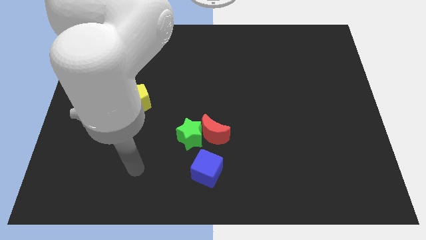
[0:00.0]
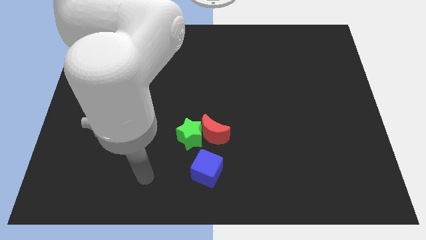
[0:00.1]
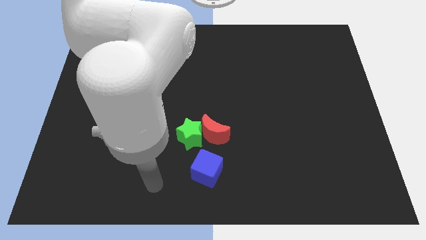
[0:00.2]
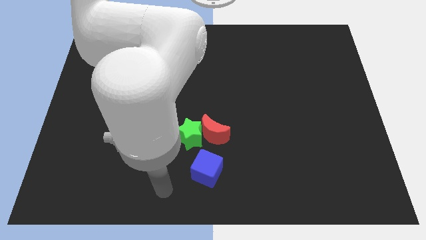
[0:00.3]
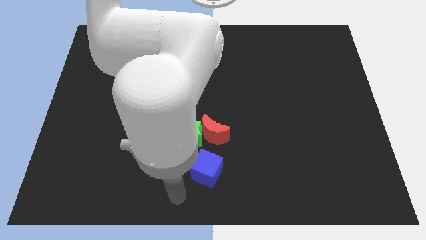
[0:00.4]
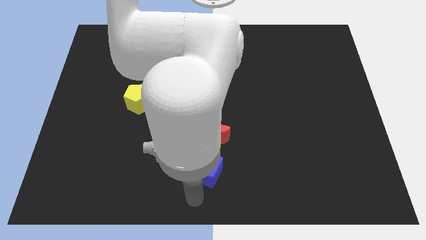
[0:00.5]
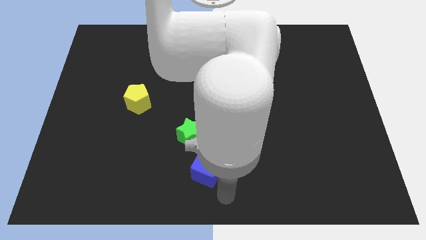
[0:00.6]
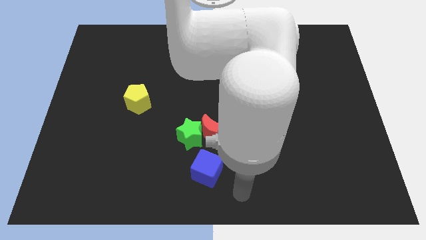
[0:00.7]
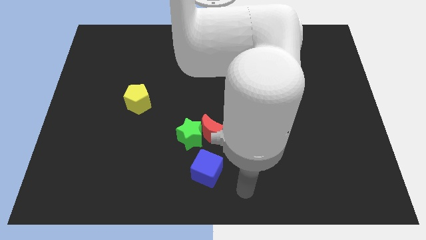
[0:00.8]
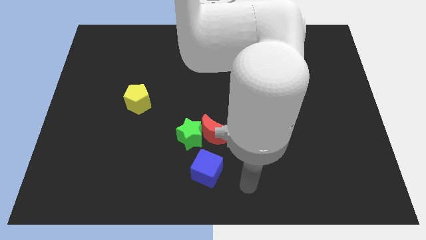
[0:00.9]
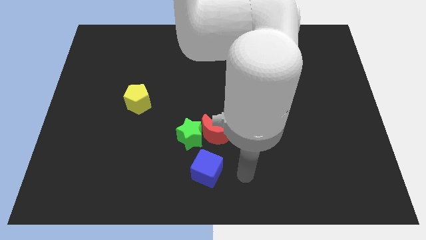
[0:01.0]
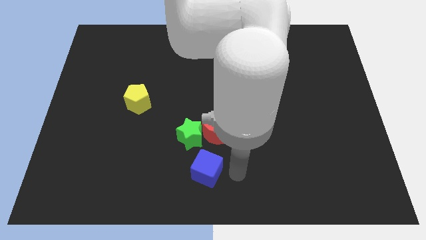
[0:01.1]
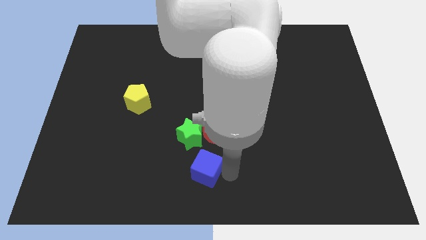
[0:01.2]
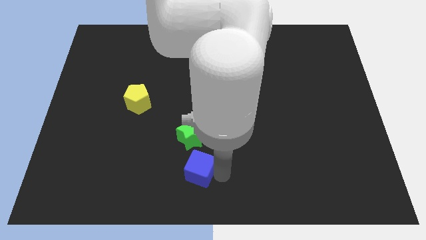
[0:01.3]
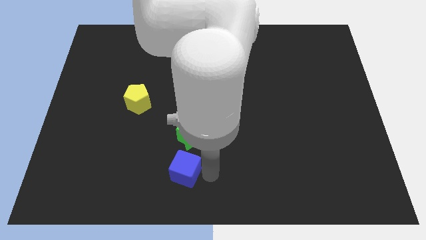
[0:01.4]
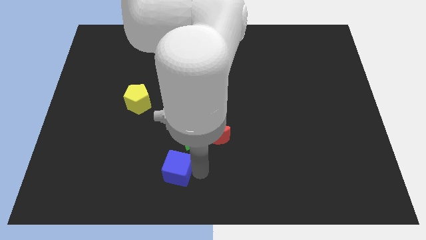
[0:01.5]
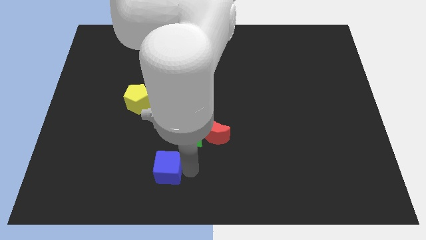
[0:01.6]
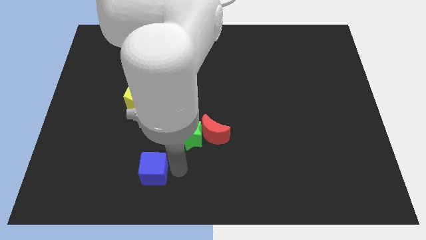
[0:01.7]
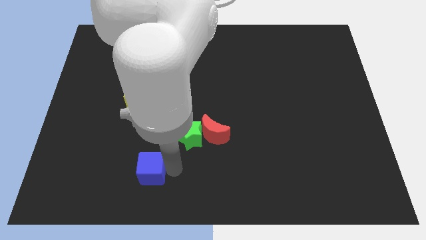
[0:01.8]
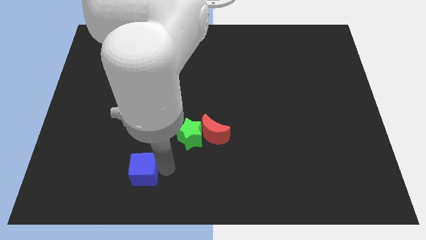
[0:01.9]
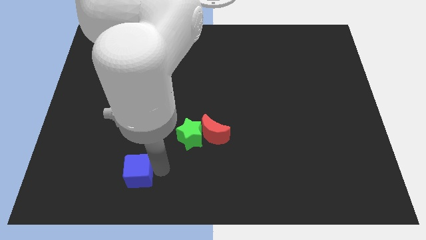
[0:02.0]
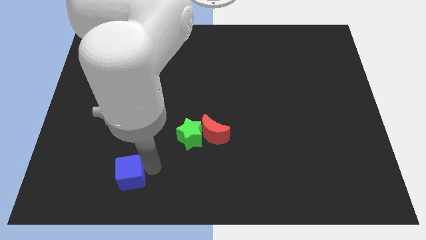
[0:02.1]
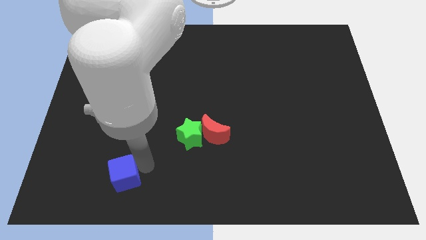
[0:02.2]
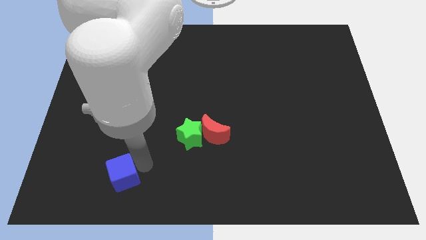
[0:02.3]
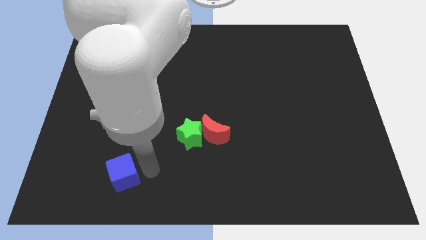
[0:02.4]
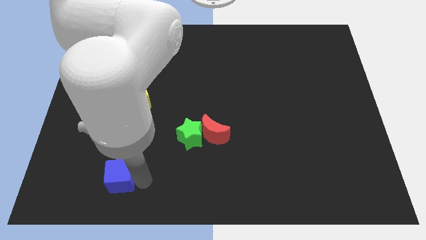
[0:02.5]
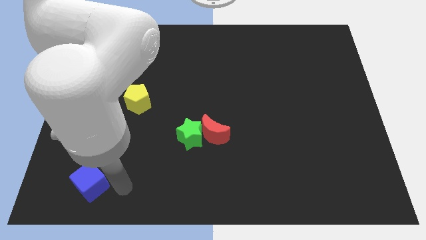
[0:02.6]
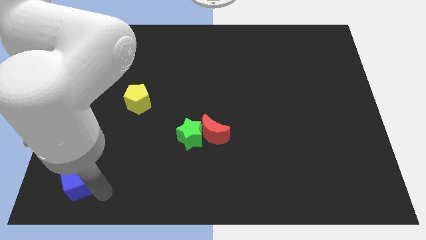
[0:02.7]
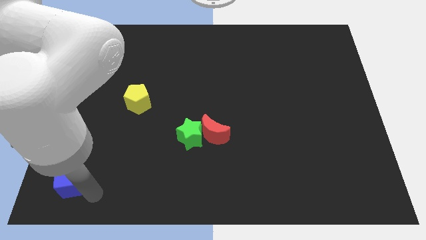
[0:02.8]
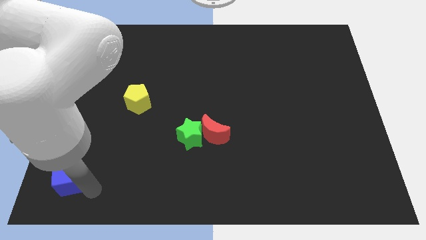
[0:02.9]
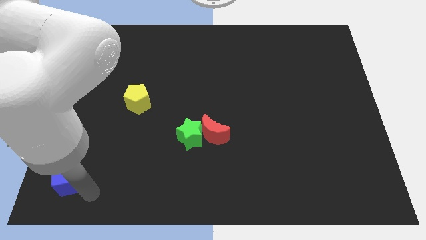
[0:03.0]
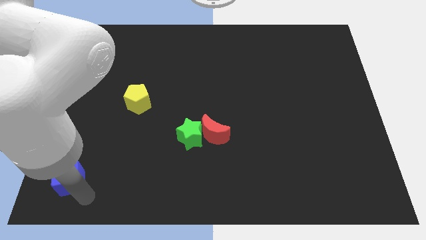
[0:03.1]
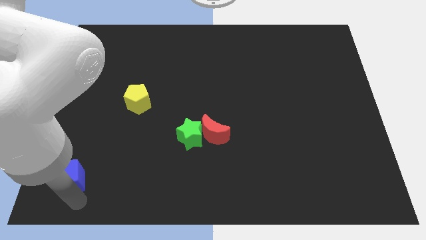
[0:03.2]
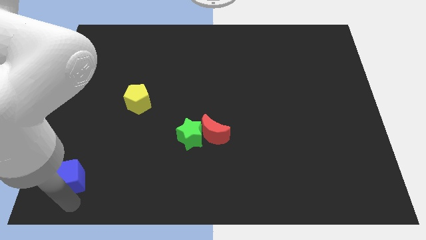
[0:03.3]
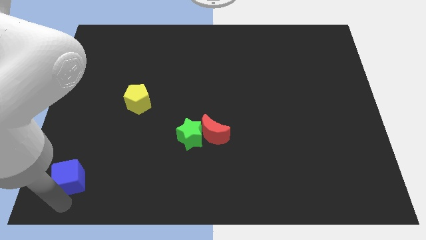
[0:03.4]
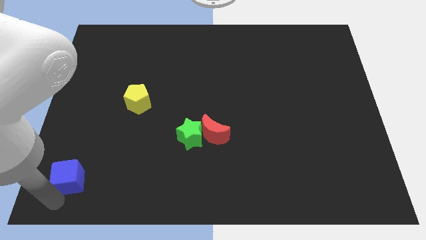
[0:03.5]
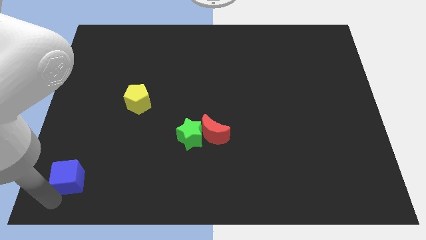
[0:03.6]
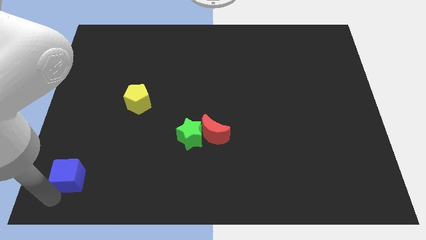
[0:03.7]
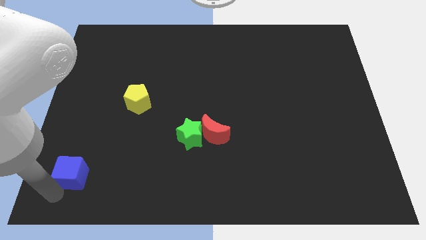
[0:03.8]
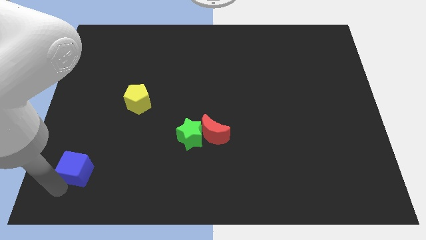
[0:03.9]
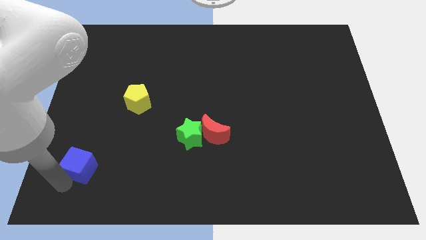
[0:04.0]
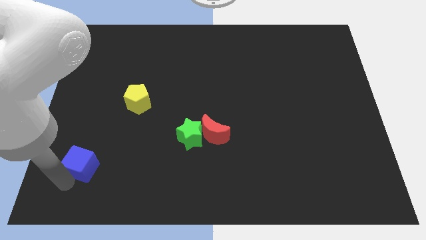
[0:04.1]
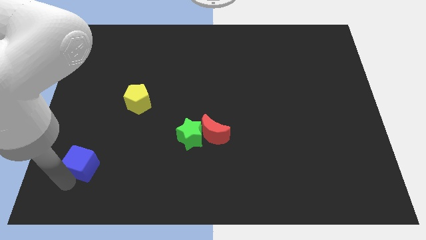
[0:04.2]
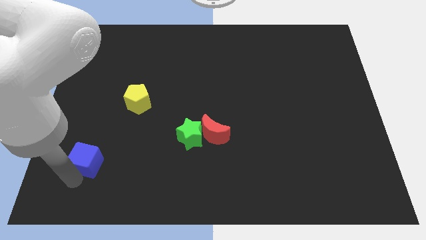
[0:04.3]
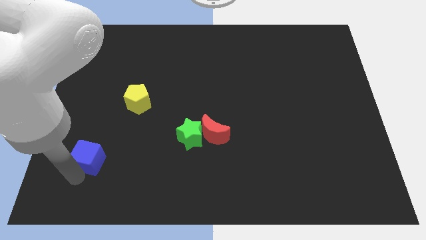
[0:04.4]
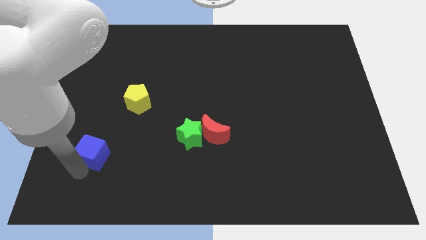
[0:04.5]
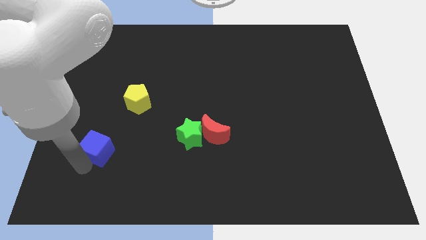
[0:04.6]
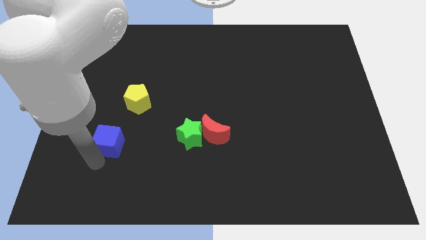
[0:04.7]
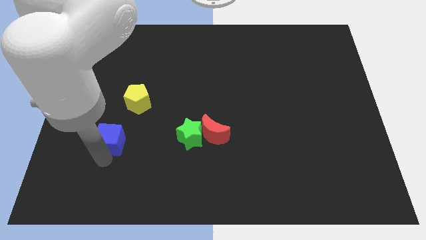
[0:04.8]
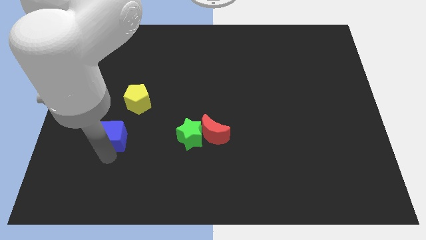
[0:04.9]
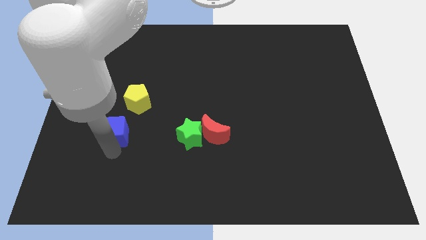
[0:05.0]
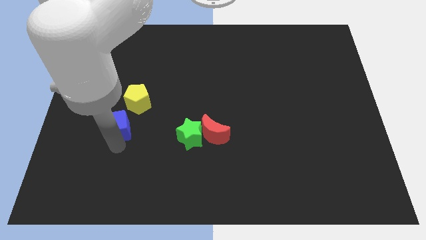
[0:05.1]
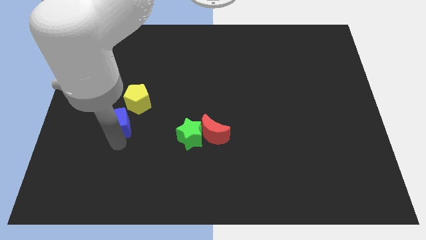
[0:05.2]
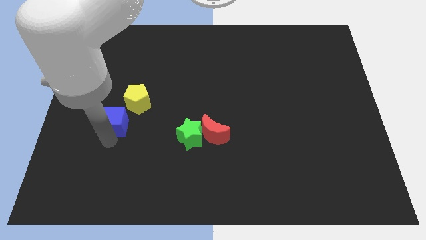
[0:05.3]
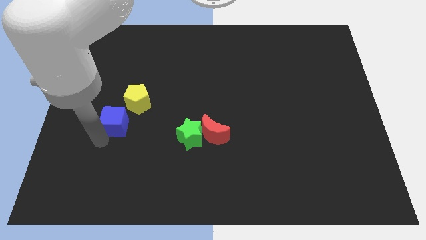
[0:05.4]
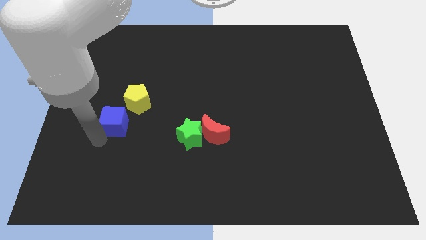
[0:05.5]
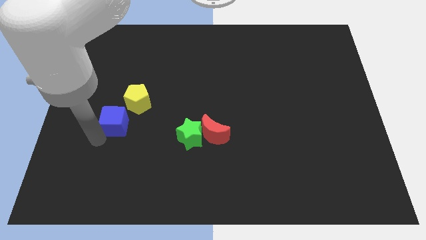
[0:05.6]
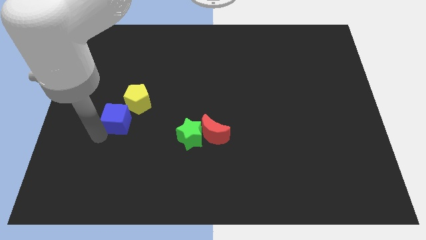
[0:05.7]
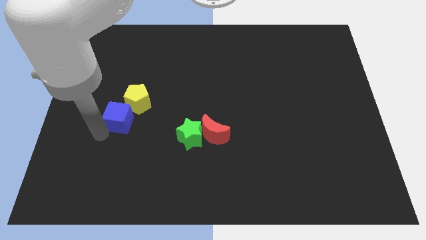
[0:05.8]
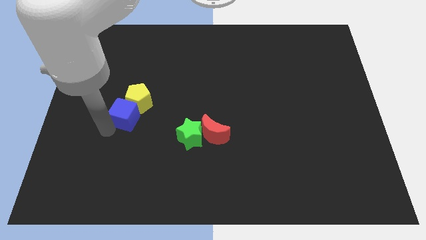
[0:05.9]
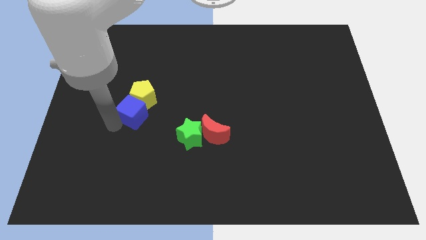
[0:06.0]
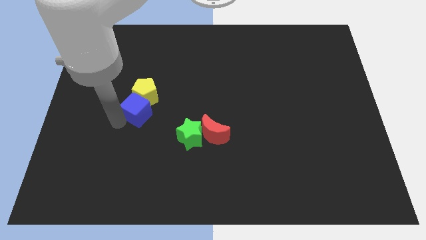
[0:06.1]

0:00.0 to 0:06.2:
push the blue cube close to the yellow block

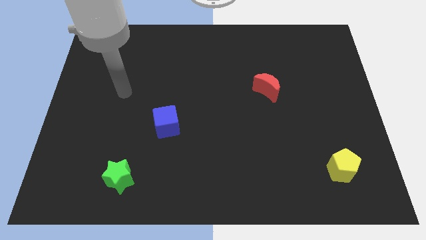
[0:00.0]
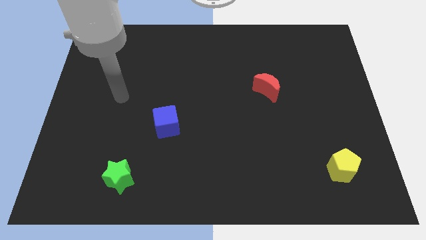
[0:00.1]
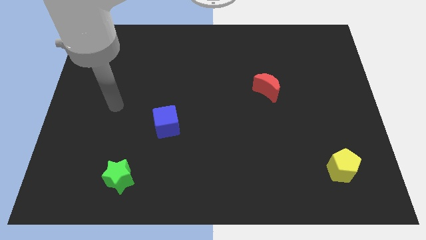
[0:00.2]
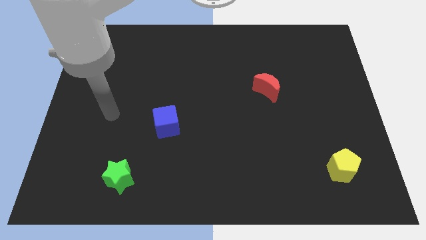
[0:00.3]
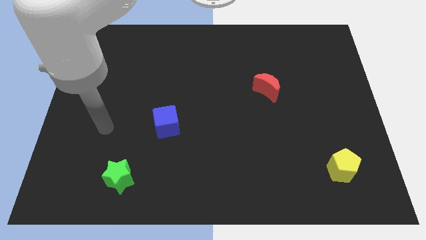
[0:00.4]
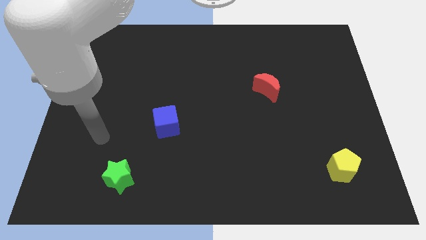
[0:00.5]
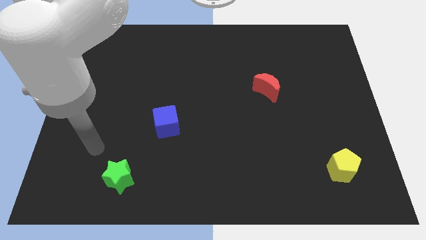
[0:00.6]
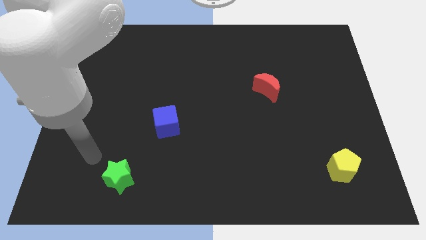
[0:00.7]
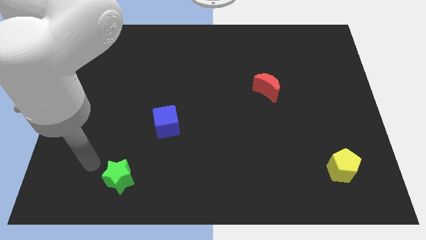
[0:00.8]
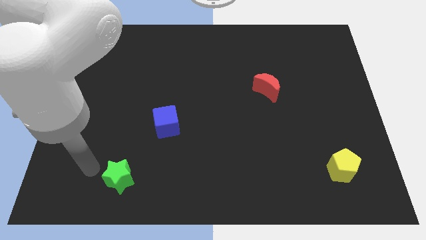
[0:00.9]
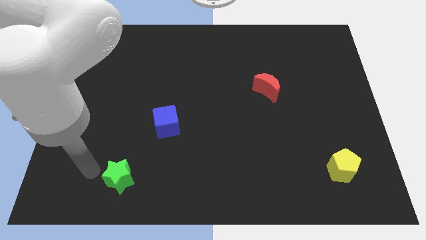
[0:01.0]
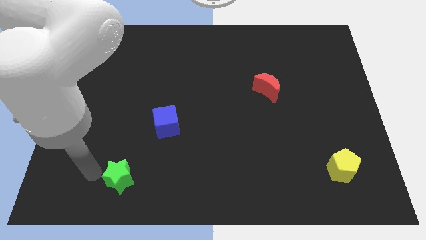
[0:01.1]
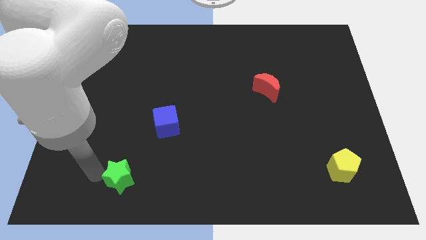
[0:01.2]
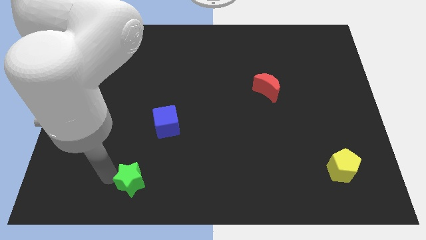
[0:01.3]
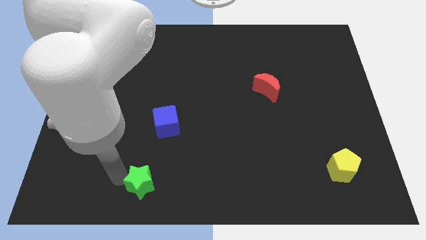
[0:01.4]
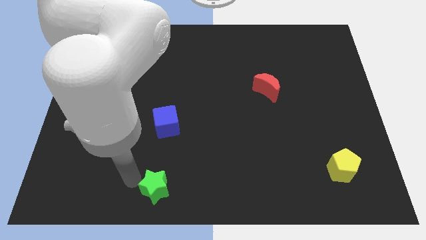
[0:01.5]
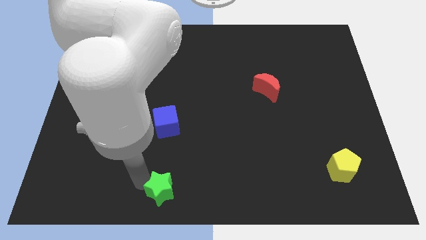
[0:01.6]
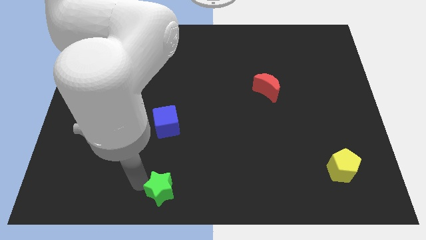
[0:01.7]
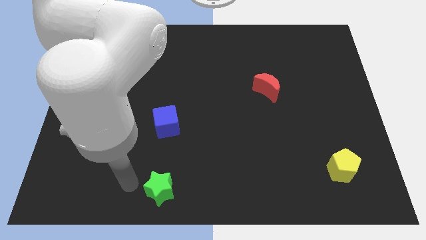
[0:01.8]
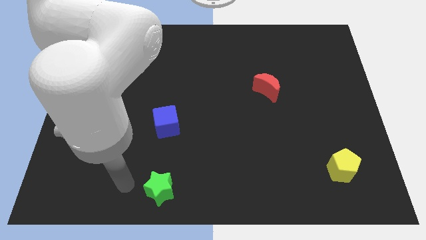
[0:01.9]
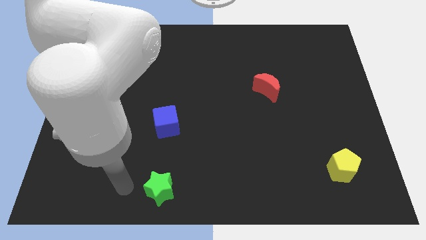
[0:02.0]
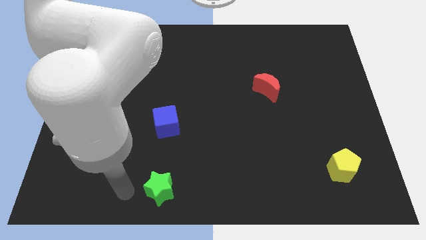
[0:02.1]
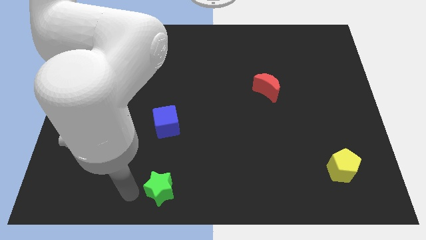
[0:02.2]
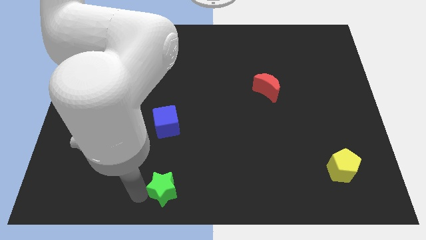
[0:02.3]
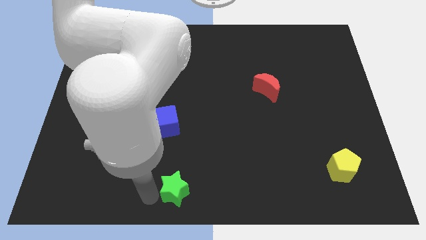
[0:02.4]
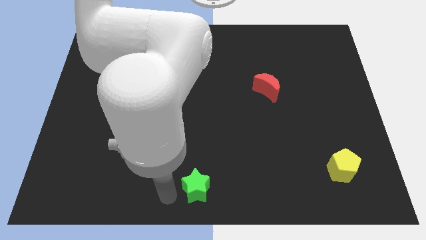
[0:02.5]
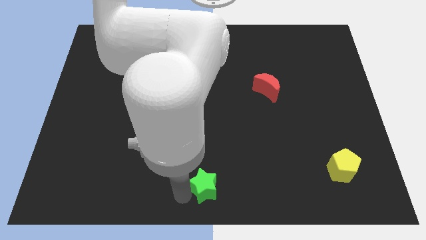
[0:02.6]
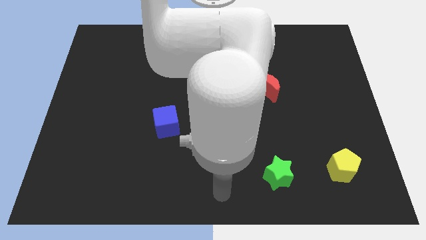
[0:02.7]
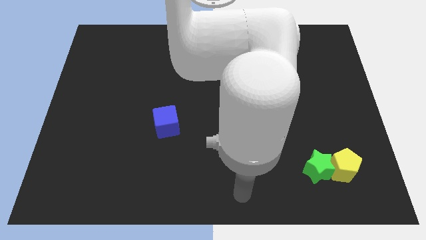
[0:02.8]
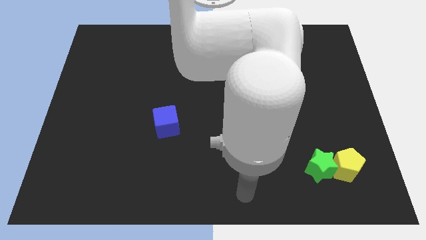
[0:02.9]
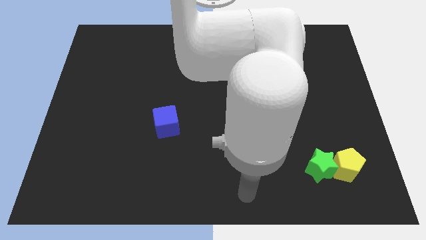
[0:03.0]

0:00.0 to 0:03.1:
slide the star close to the yellow pentagon
